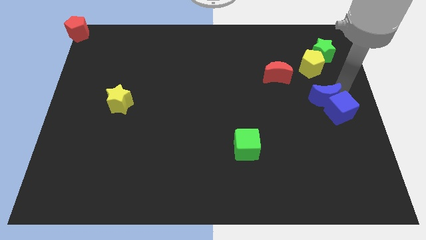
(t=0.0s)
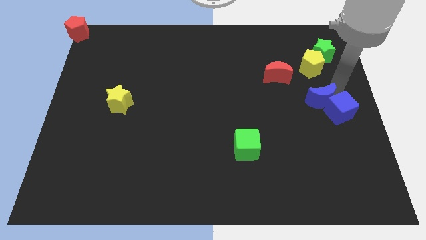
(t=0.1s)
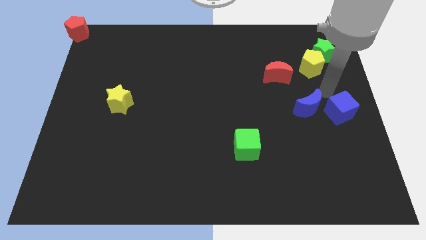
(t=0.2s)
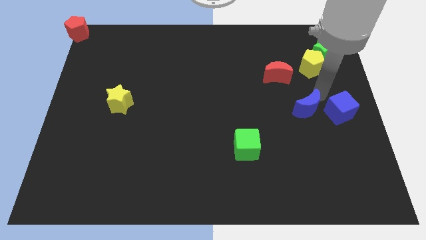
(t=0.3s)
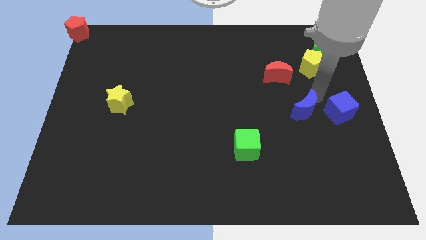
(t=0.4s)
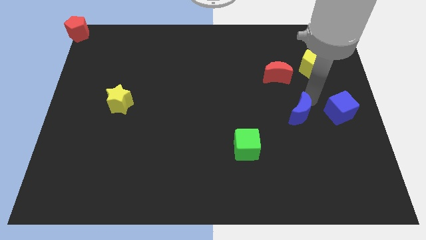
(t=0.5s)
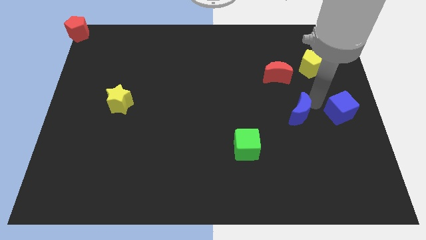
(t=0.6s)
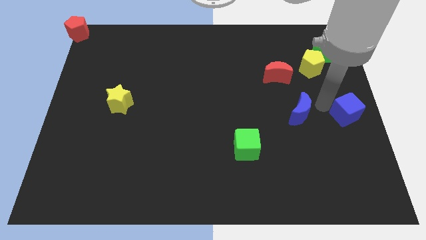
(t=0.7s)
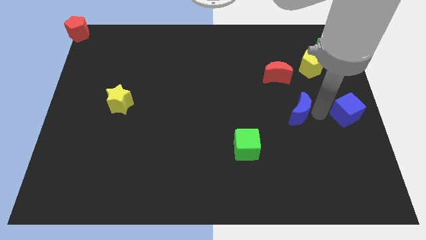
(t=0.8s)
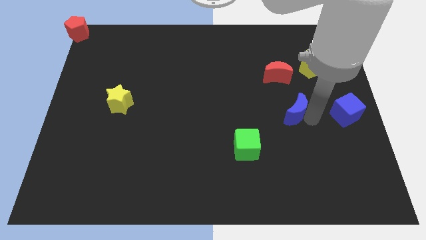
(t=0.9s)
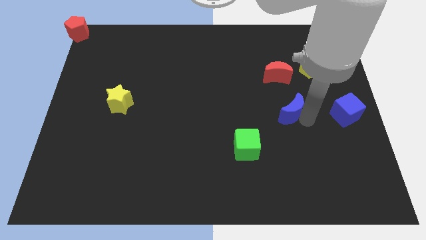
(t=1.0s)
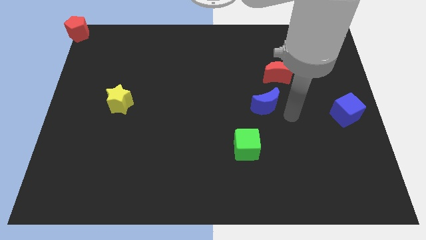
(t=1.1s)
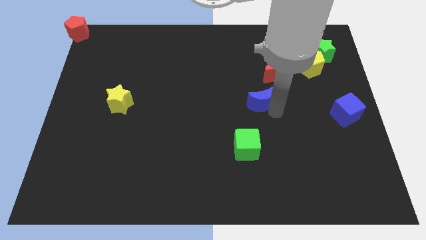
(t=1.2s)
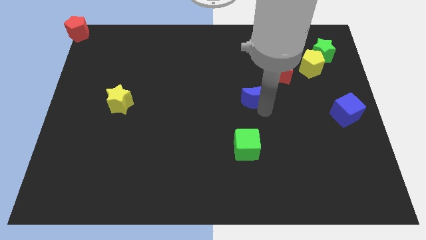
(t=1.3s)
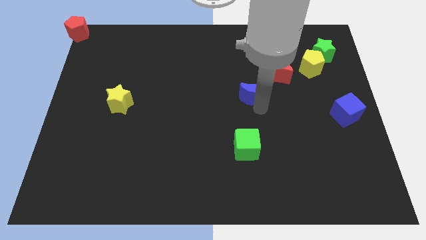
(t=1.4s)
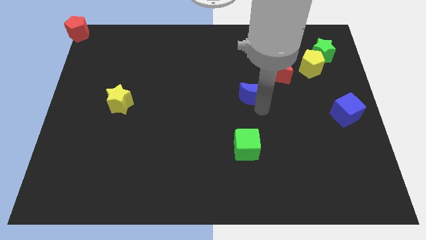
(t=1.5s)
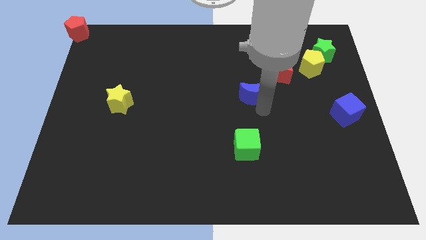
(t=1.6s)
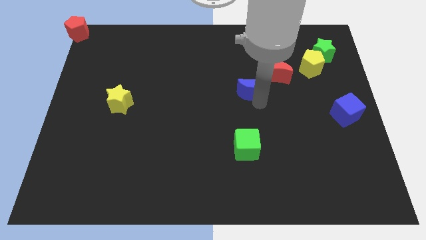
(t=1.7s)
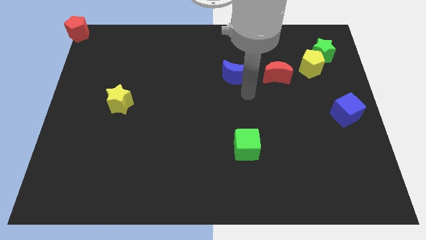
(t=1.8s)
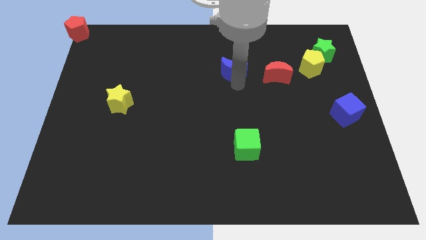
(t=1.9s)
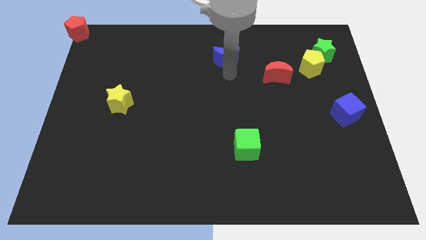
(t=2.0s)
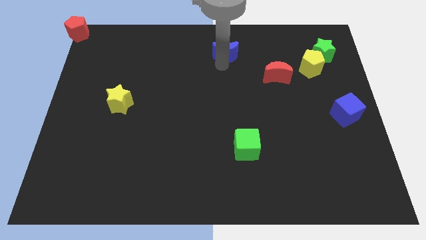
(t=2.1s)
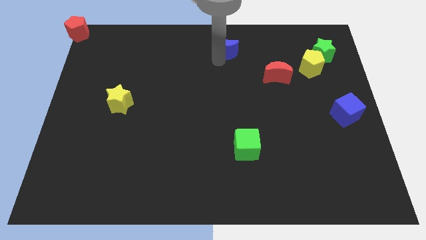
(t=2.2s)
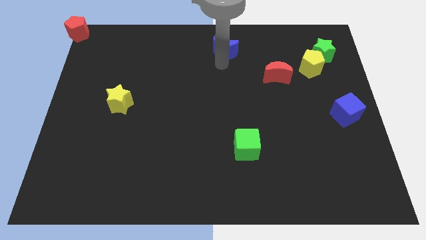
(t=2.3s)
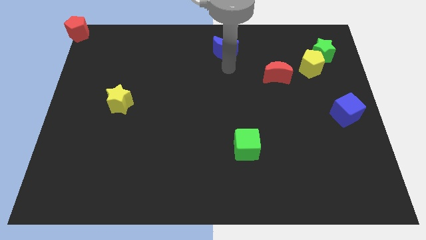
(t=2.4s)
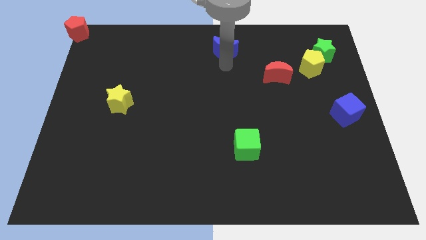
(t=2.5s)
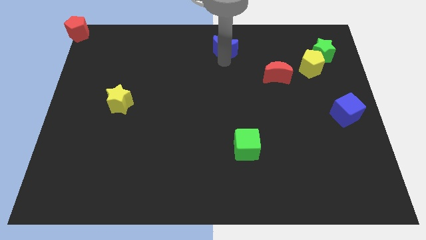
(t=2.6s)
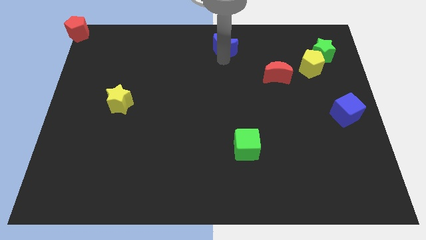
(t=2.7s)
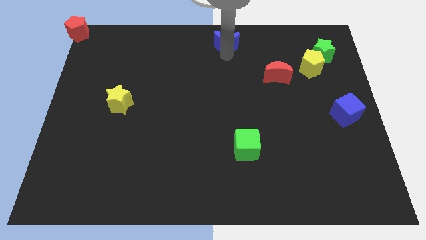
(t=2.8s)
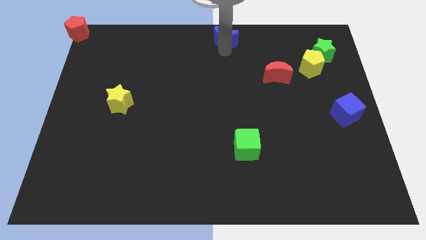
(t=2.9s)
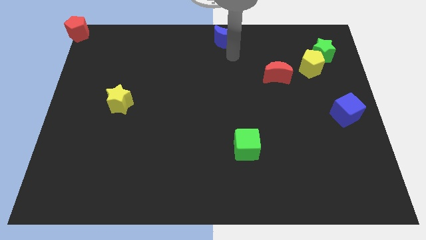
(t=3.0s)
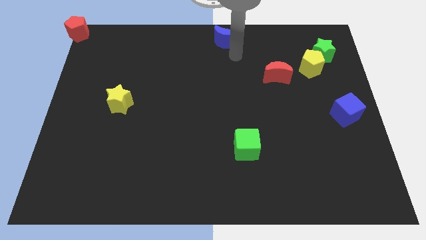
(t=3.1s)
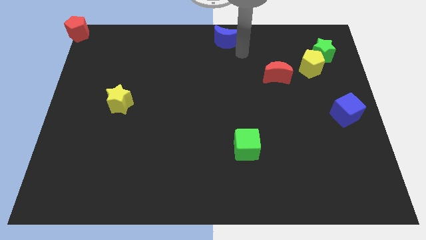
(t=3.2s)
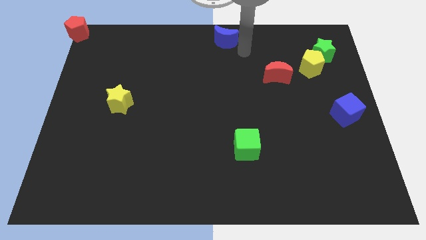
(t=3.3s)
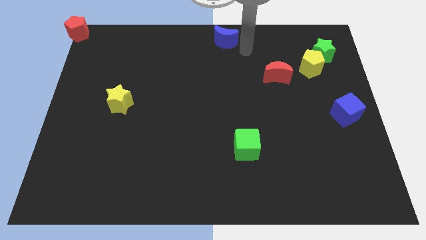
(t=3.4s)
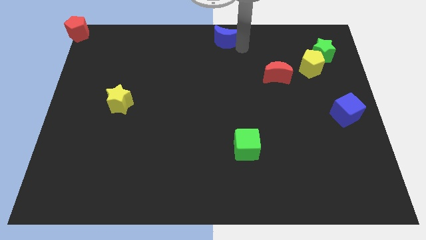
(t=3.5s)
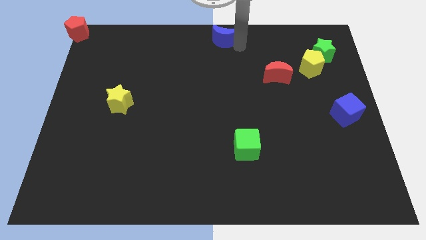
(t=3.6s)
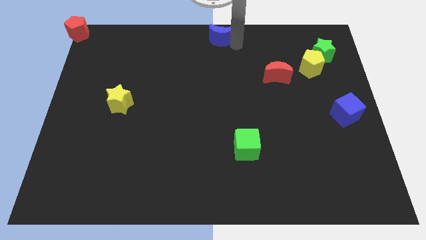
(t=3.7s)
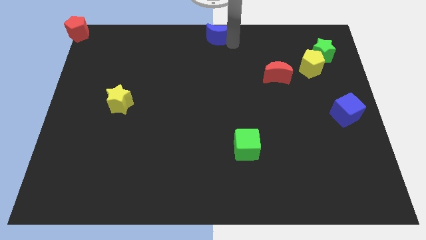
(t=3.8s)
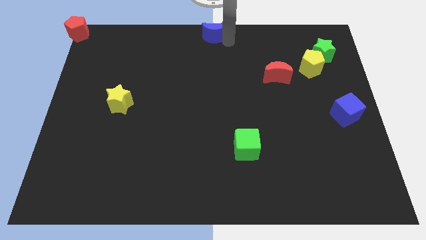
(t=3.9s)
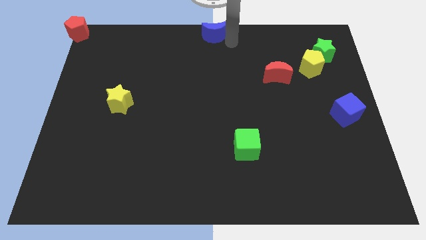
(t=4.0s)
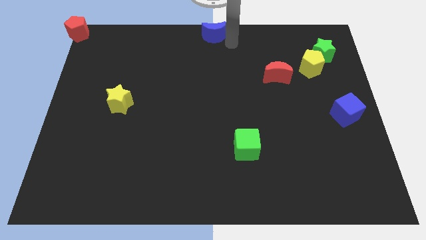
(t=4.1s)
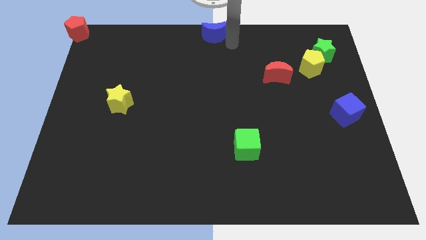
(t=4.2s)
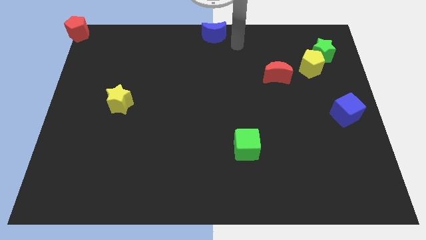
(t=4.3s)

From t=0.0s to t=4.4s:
move blue moon to the top middle of the board

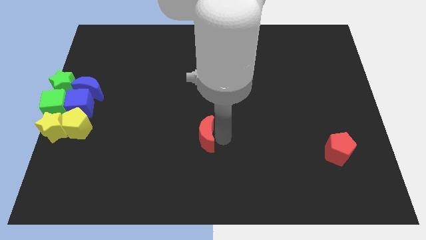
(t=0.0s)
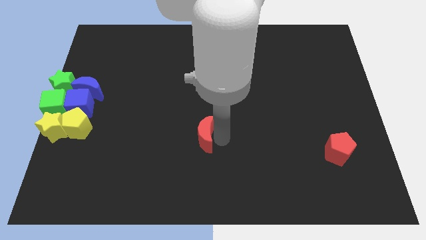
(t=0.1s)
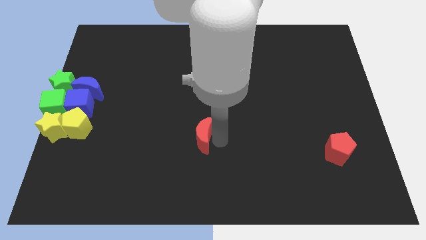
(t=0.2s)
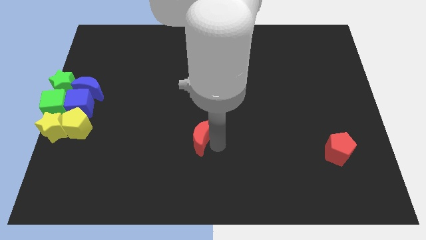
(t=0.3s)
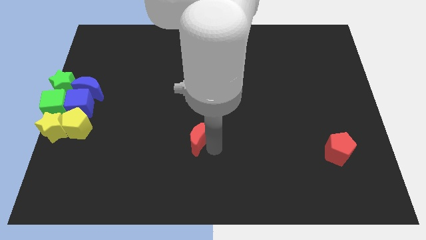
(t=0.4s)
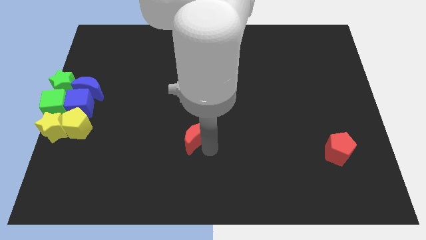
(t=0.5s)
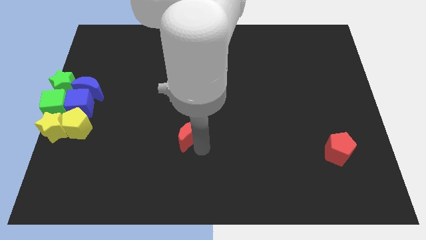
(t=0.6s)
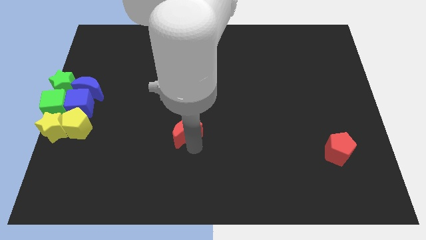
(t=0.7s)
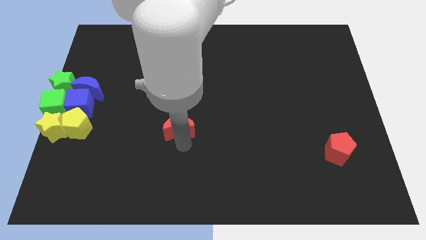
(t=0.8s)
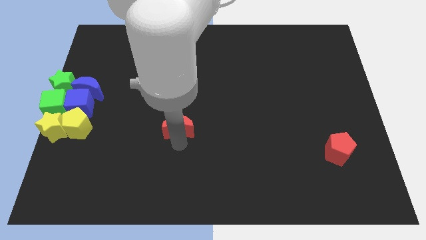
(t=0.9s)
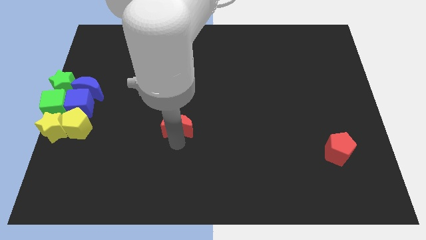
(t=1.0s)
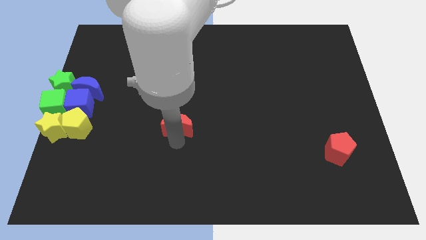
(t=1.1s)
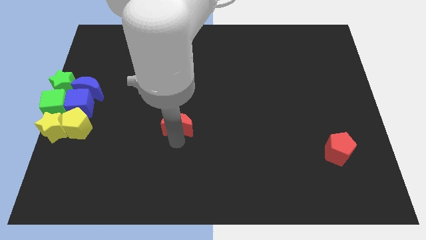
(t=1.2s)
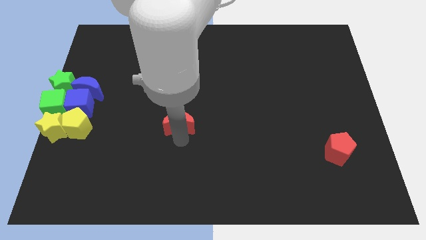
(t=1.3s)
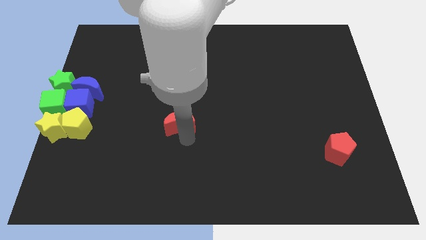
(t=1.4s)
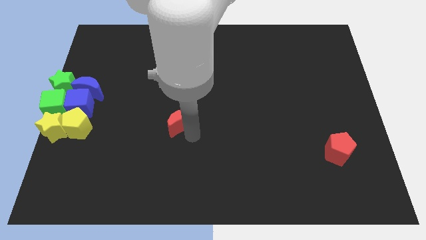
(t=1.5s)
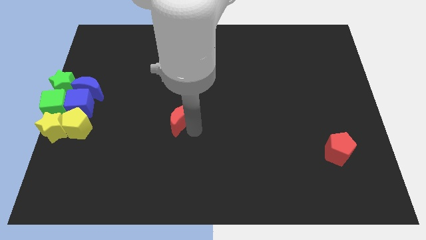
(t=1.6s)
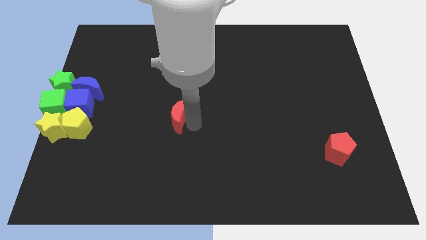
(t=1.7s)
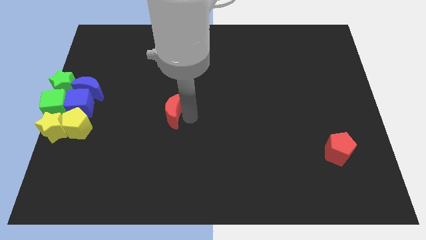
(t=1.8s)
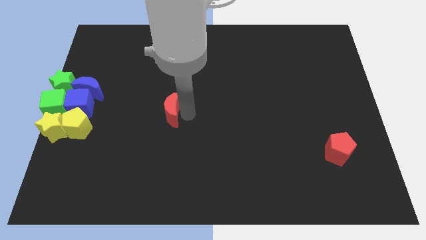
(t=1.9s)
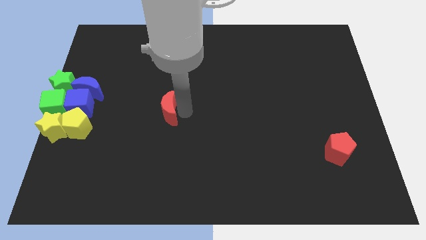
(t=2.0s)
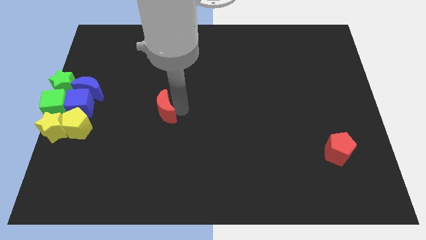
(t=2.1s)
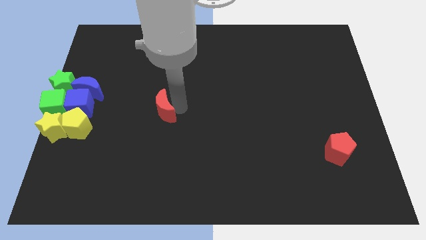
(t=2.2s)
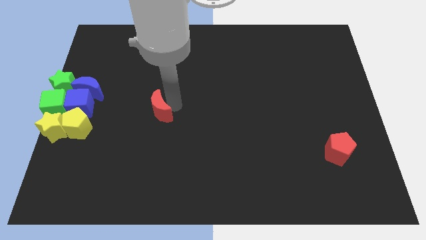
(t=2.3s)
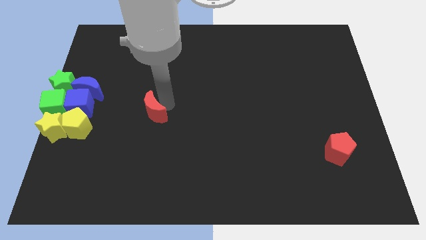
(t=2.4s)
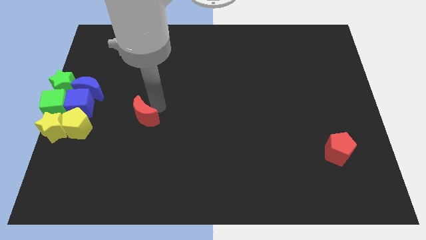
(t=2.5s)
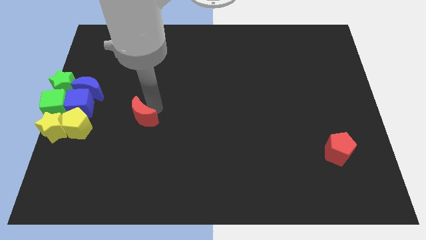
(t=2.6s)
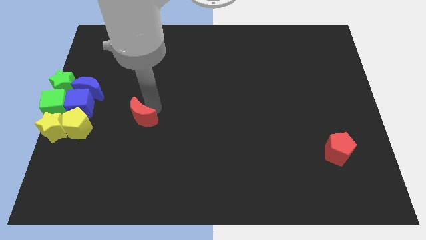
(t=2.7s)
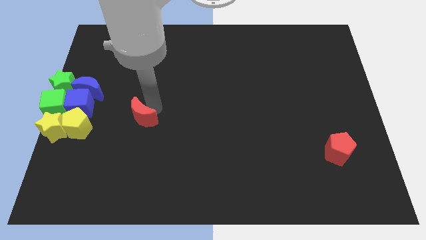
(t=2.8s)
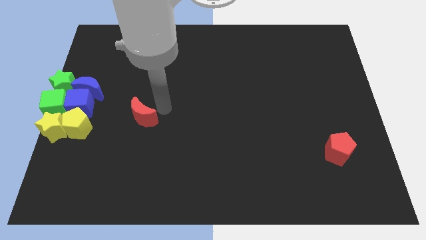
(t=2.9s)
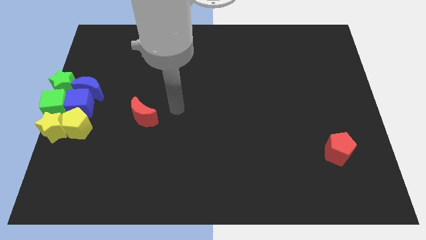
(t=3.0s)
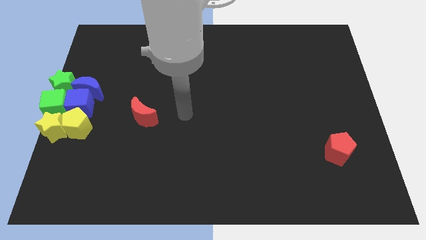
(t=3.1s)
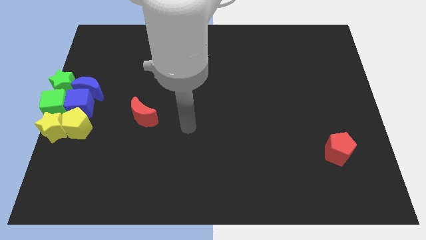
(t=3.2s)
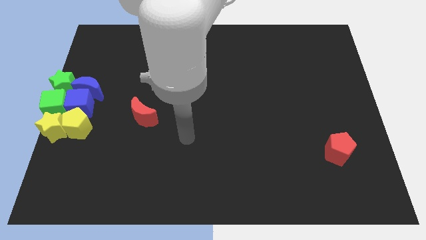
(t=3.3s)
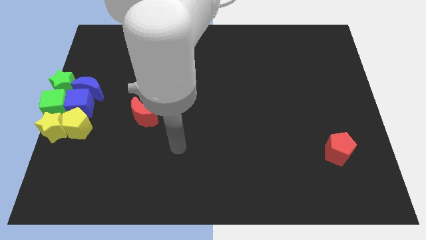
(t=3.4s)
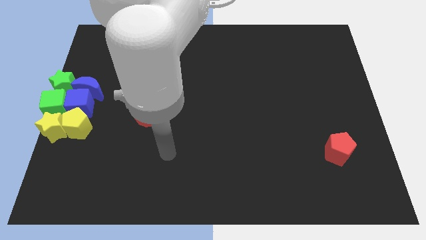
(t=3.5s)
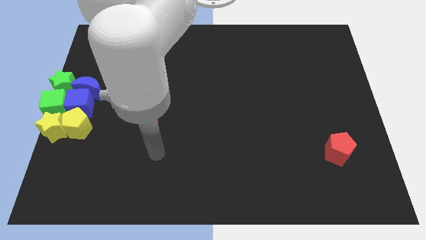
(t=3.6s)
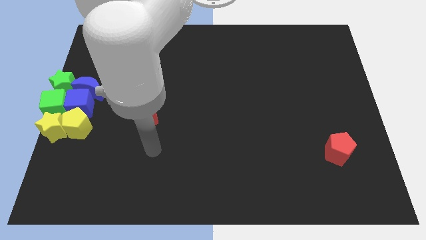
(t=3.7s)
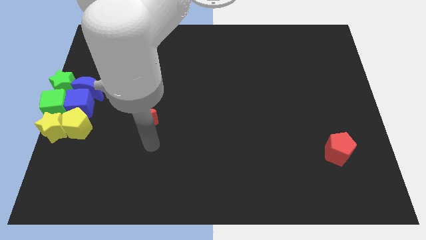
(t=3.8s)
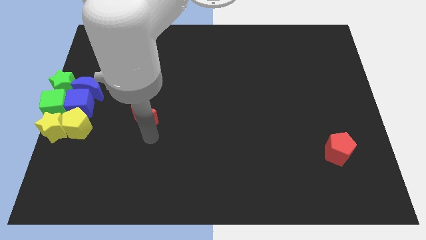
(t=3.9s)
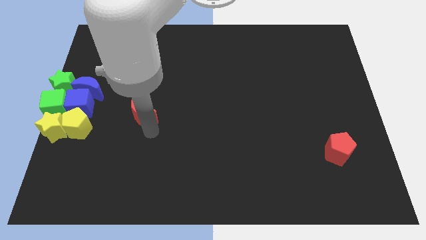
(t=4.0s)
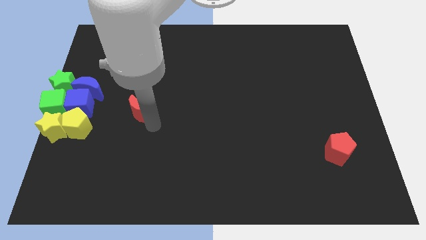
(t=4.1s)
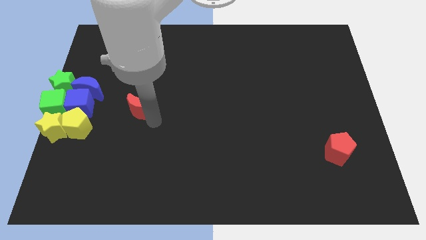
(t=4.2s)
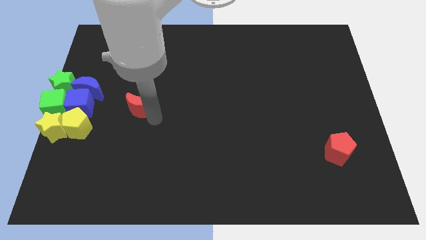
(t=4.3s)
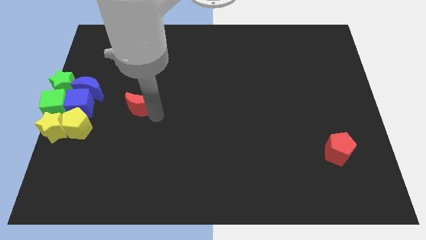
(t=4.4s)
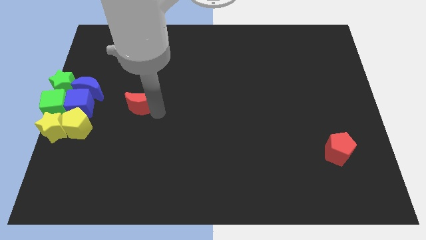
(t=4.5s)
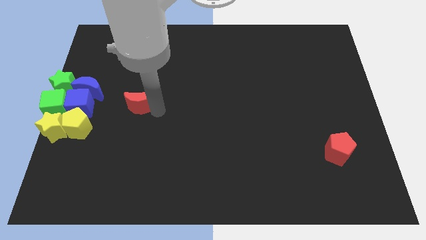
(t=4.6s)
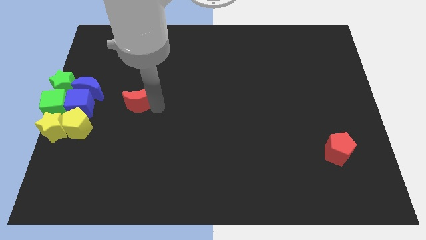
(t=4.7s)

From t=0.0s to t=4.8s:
move the red moon to the horizontal right side of the blue cube
